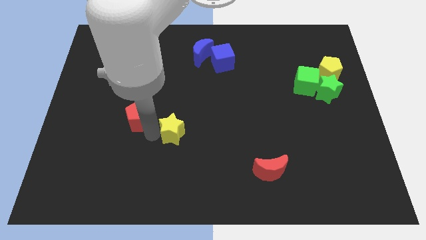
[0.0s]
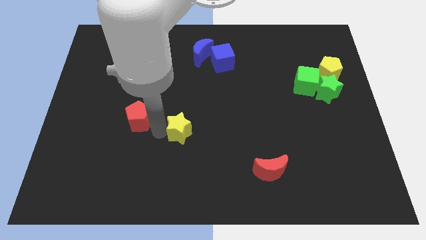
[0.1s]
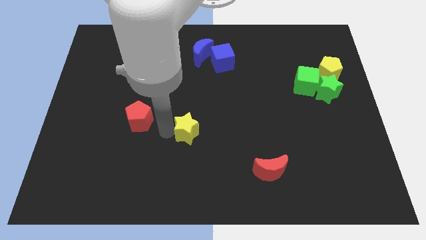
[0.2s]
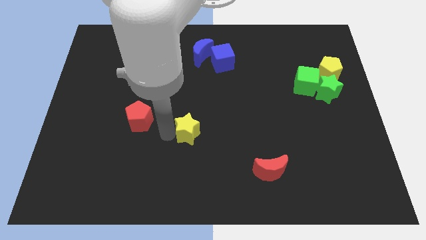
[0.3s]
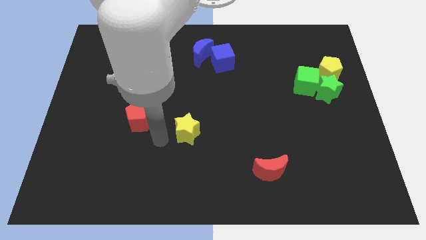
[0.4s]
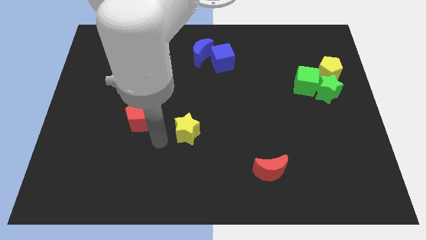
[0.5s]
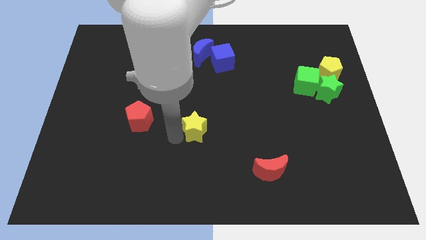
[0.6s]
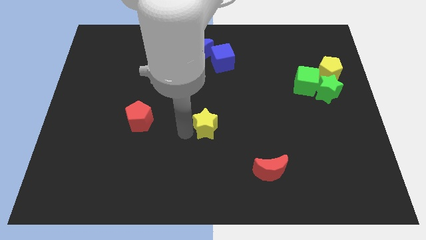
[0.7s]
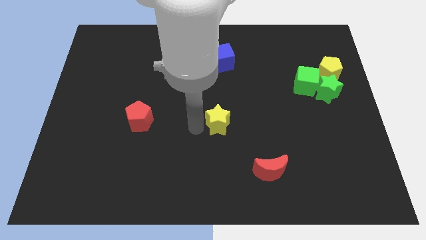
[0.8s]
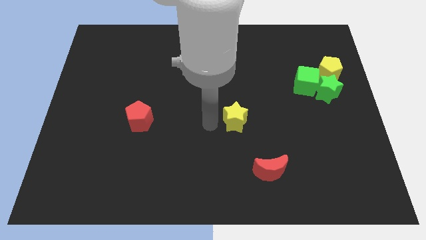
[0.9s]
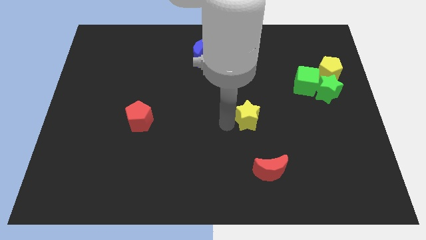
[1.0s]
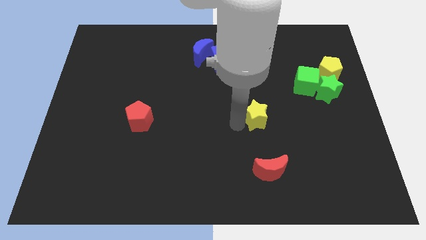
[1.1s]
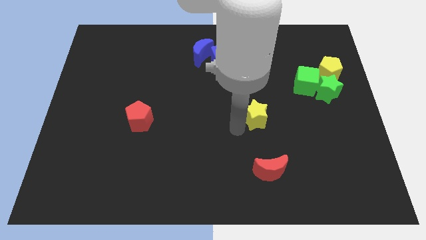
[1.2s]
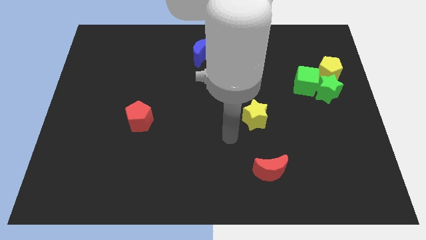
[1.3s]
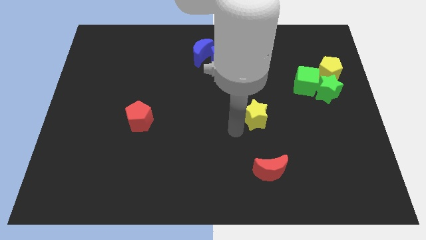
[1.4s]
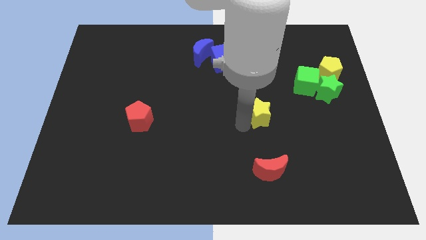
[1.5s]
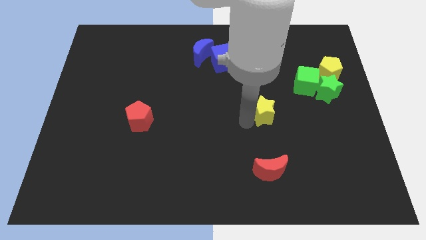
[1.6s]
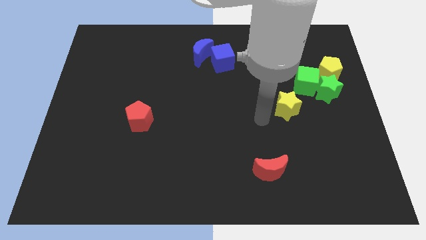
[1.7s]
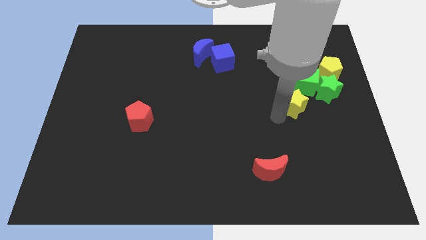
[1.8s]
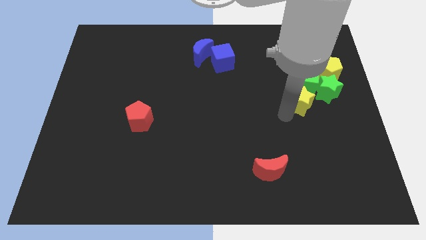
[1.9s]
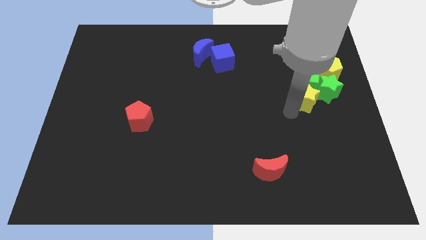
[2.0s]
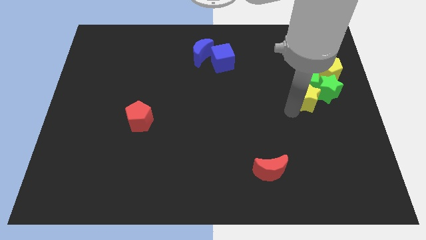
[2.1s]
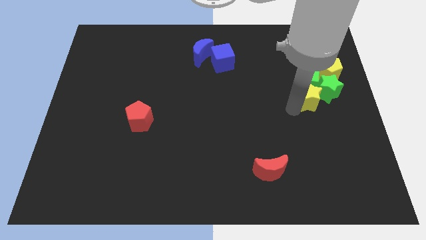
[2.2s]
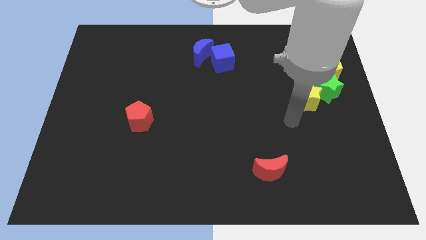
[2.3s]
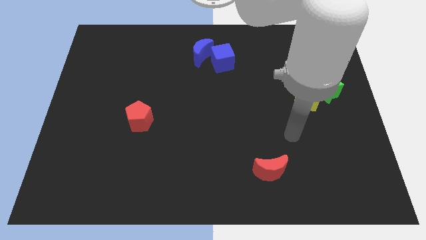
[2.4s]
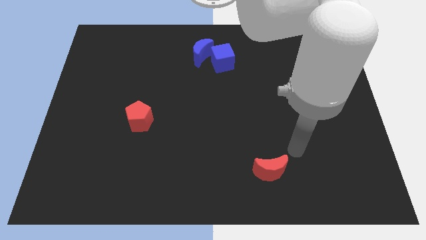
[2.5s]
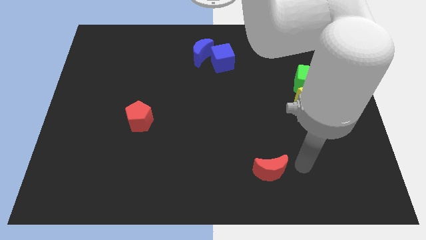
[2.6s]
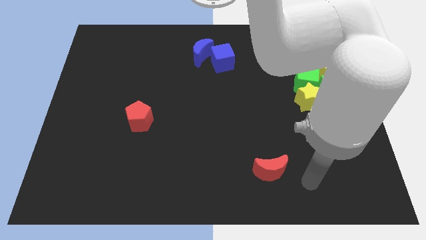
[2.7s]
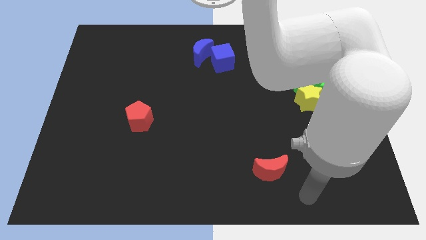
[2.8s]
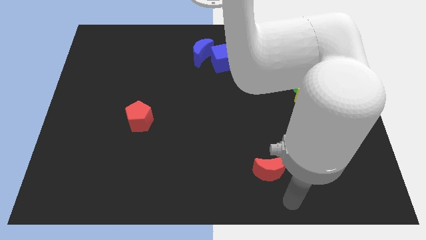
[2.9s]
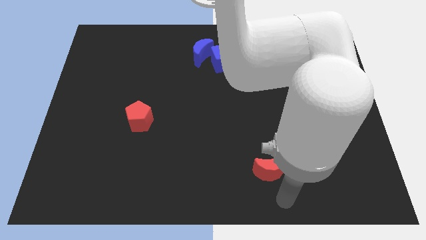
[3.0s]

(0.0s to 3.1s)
place the yellow star below the green cube

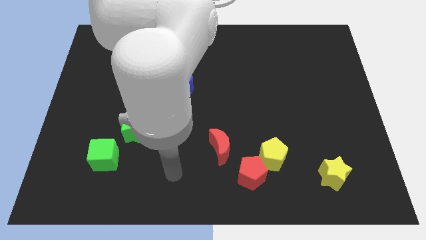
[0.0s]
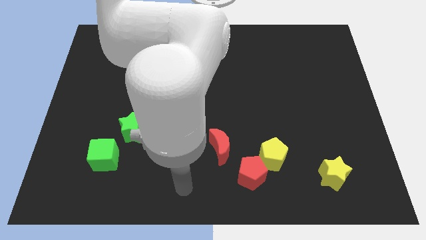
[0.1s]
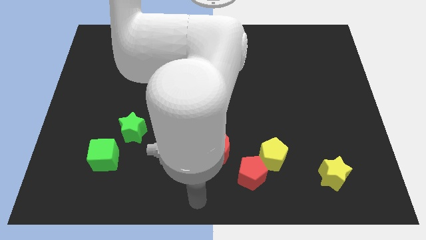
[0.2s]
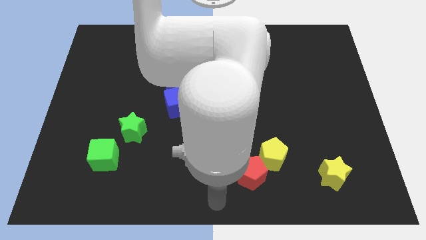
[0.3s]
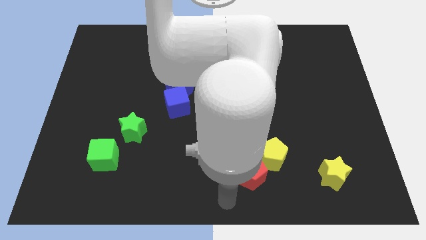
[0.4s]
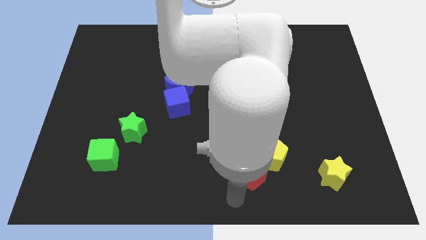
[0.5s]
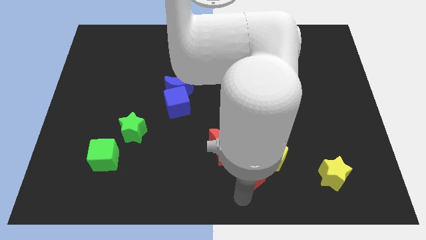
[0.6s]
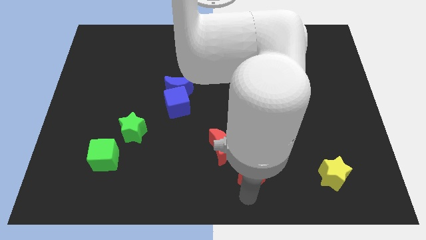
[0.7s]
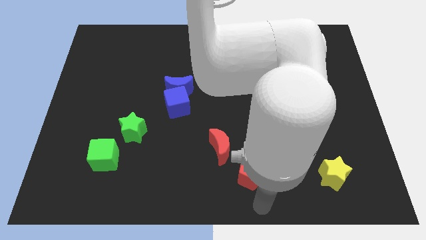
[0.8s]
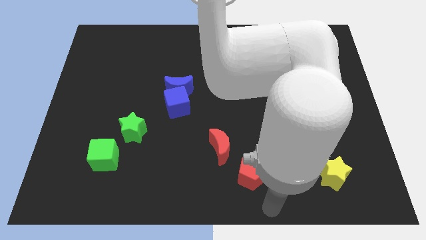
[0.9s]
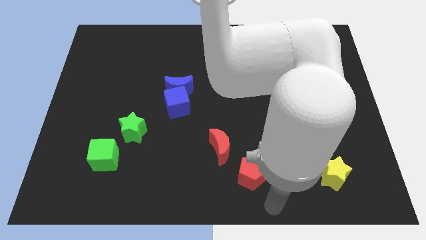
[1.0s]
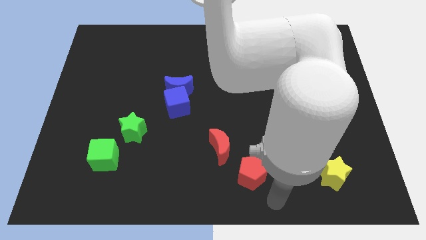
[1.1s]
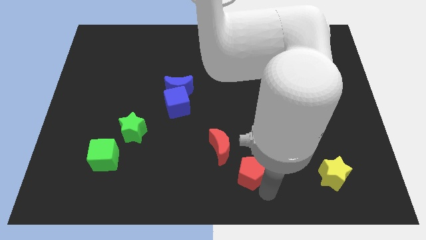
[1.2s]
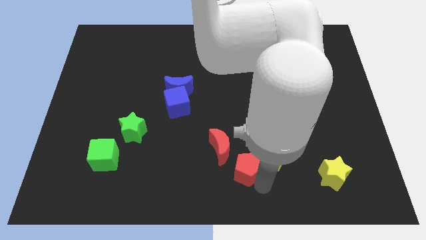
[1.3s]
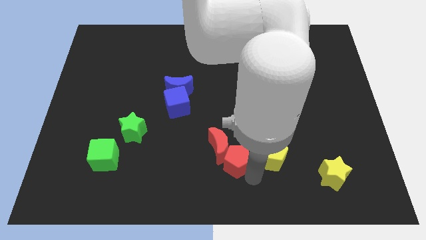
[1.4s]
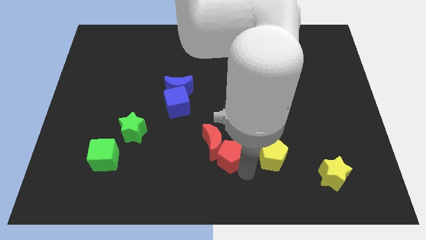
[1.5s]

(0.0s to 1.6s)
go and separate the red pentagon and the yellow pentagon

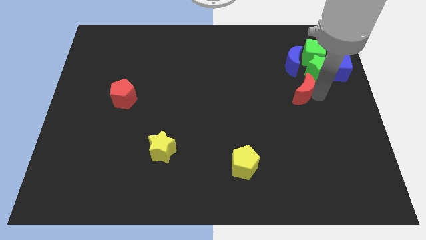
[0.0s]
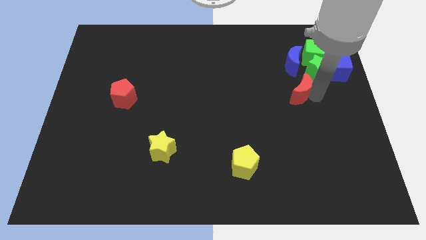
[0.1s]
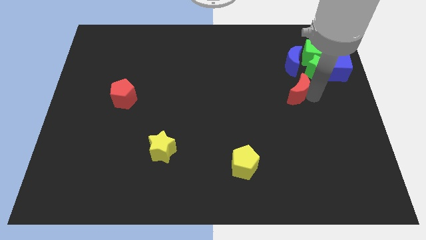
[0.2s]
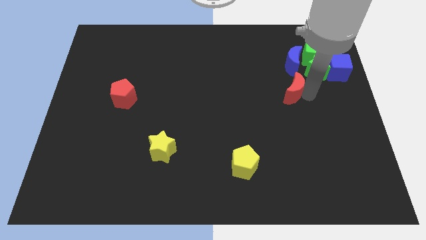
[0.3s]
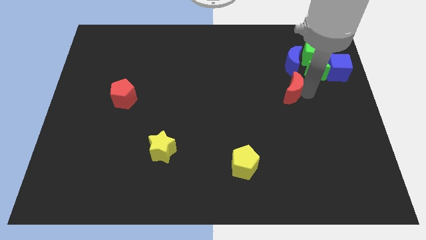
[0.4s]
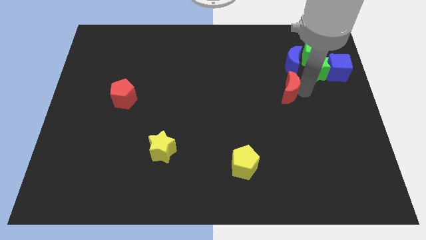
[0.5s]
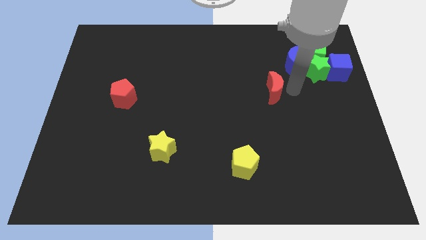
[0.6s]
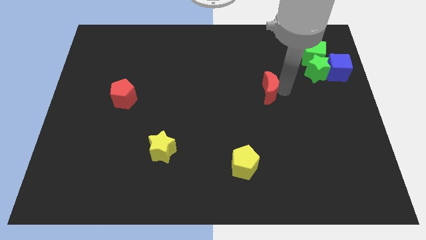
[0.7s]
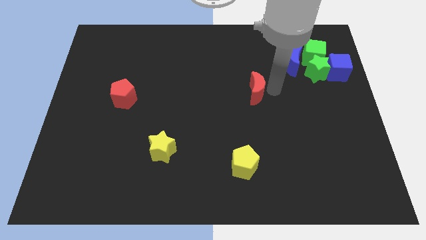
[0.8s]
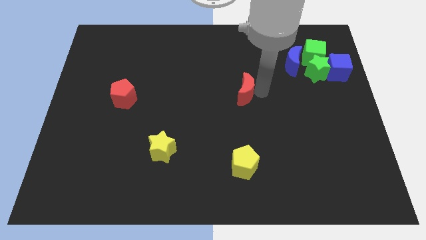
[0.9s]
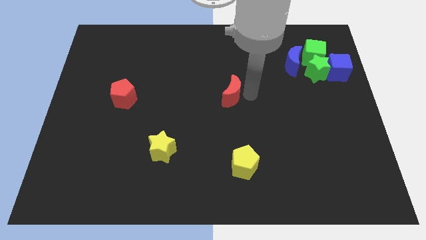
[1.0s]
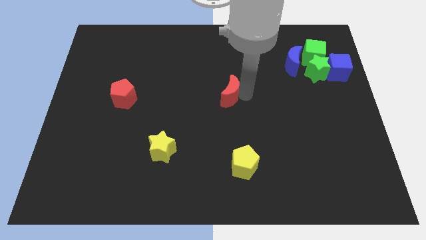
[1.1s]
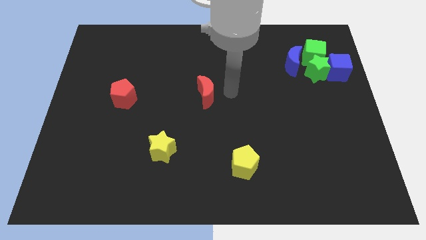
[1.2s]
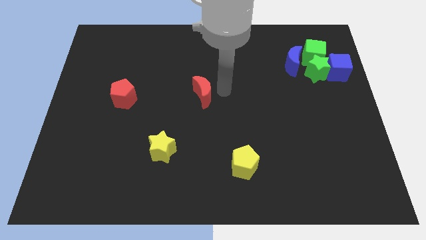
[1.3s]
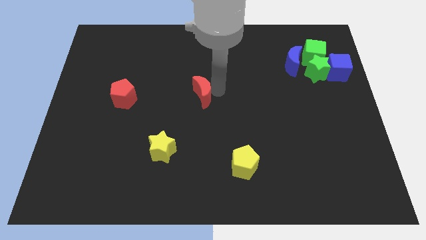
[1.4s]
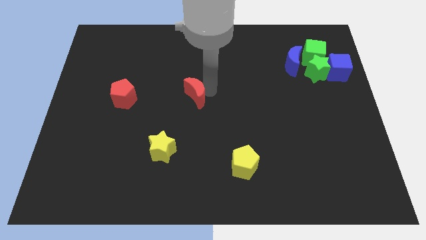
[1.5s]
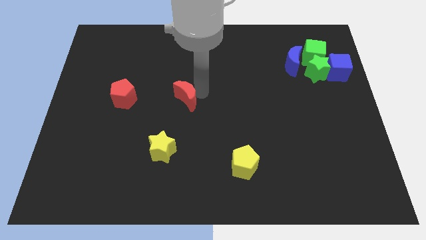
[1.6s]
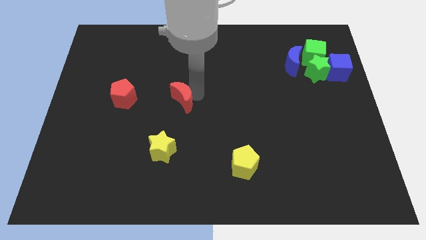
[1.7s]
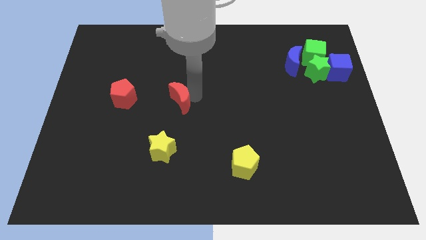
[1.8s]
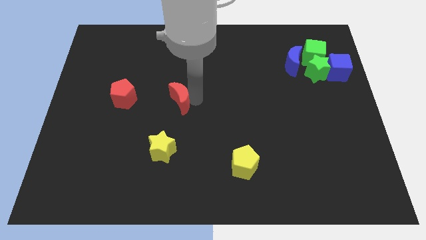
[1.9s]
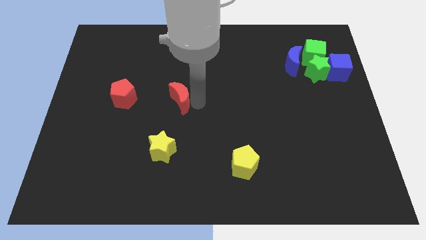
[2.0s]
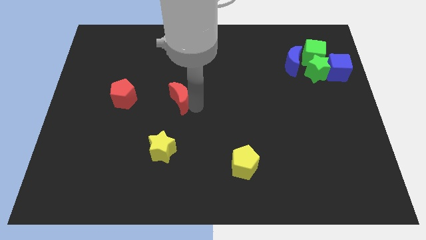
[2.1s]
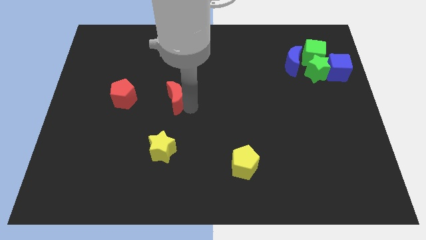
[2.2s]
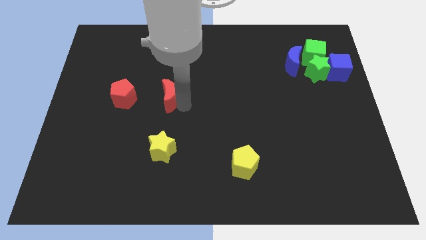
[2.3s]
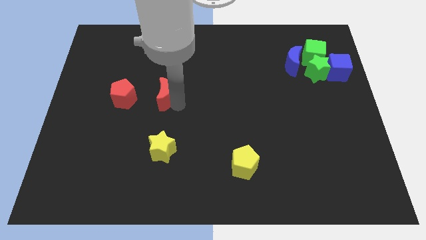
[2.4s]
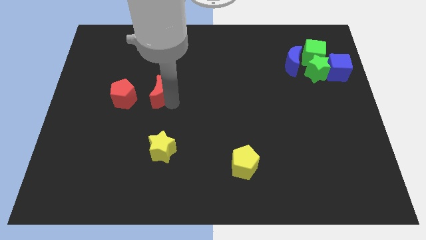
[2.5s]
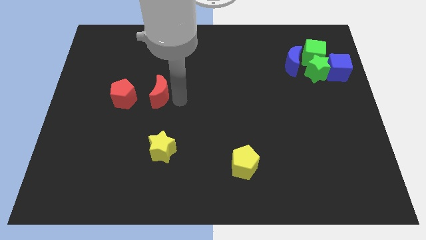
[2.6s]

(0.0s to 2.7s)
place the red crescent to the right side of red pentagon

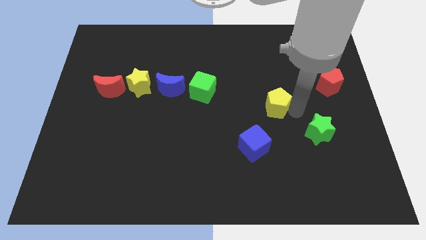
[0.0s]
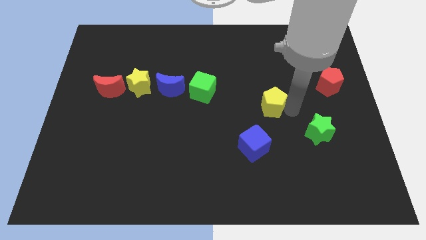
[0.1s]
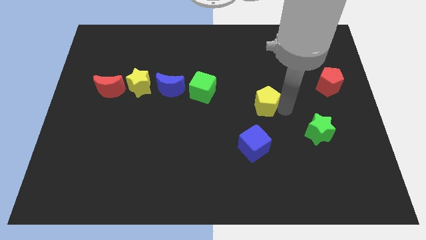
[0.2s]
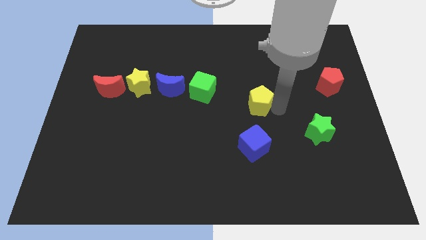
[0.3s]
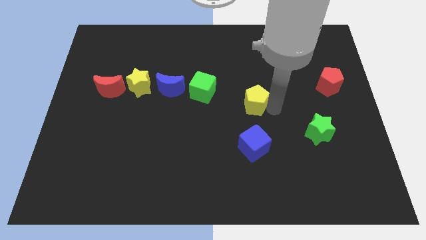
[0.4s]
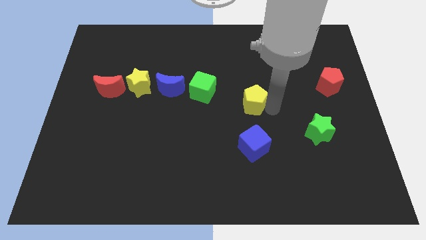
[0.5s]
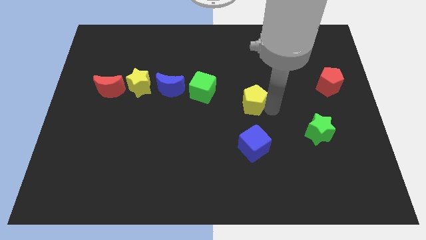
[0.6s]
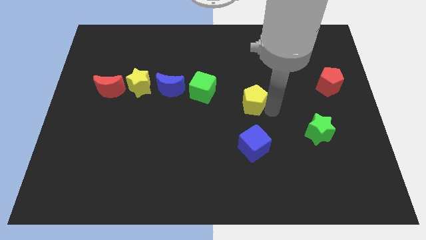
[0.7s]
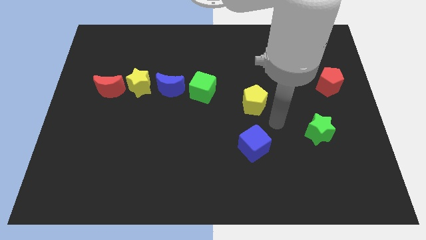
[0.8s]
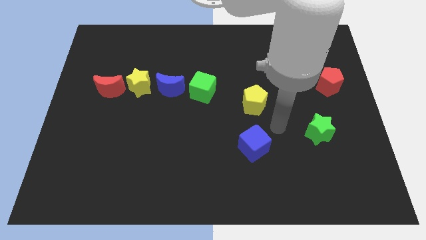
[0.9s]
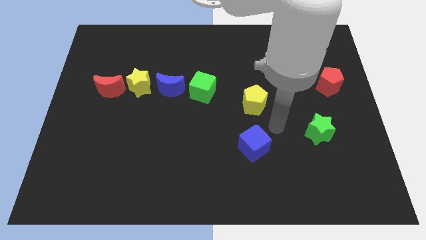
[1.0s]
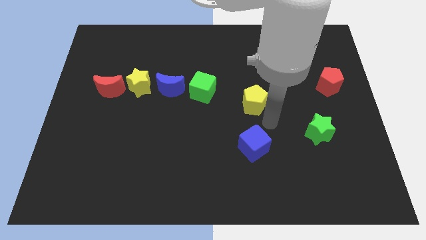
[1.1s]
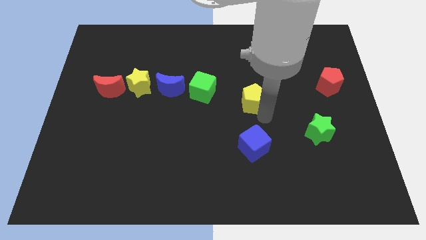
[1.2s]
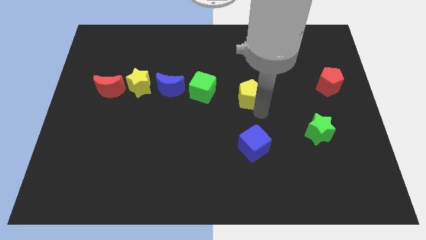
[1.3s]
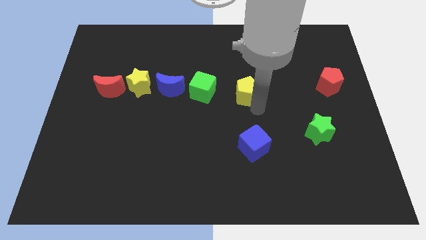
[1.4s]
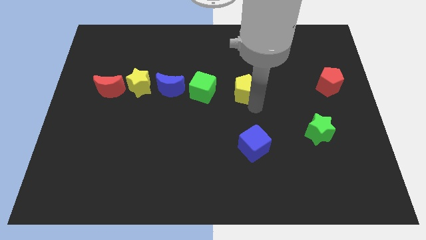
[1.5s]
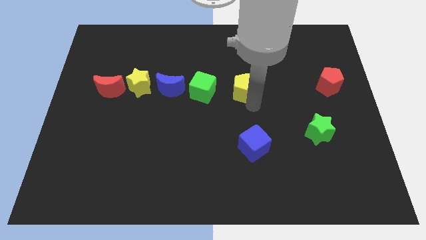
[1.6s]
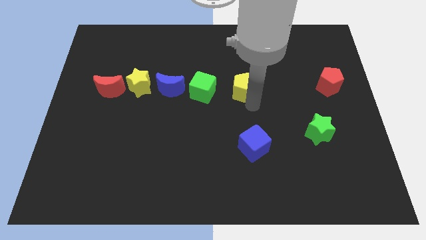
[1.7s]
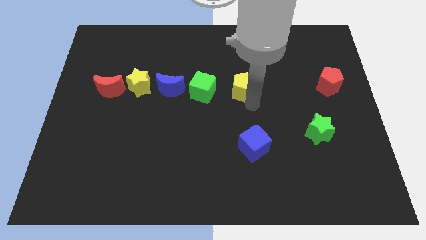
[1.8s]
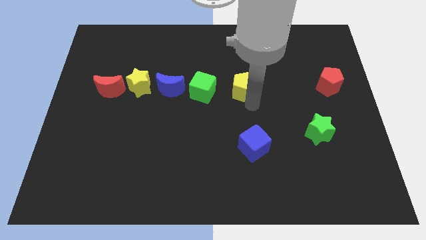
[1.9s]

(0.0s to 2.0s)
move the yellow pentagon towards the center of the board
